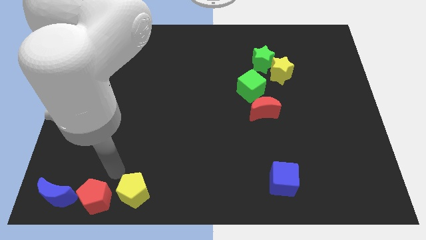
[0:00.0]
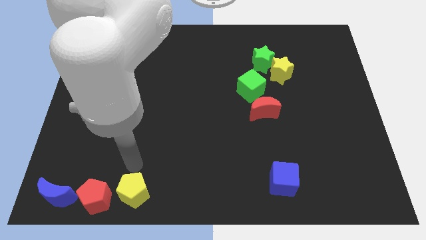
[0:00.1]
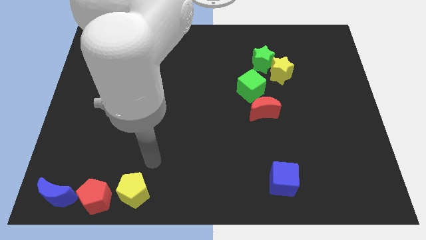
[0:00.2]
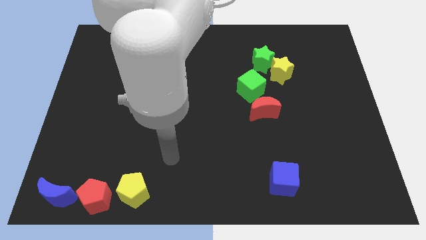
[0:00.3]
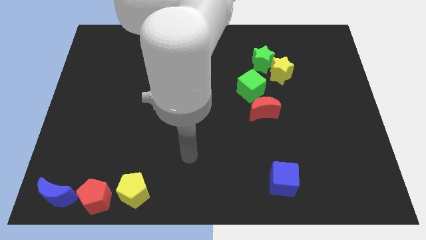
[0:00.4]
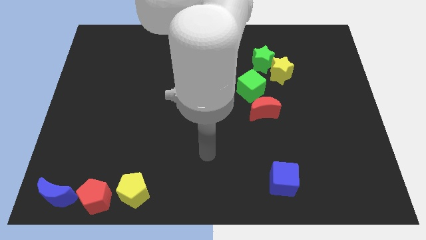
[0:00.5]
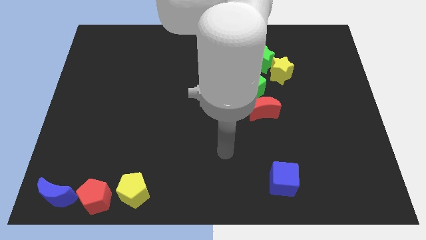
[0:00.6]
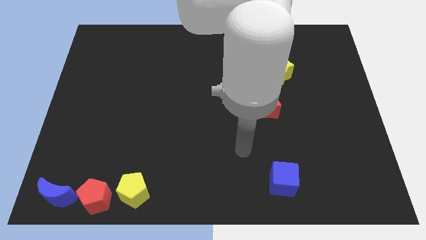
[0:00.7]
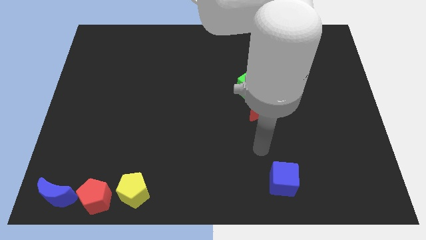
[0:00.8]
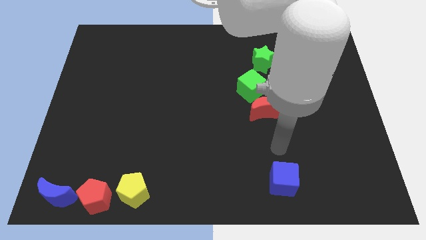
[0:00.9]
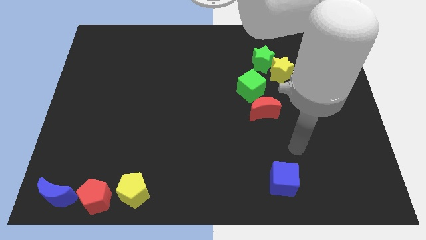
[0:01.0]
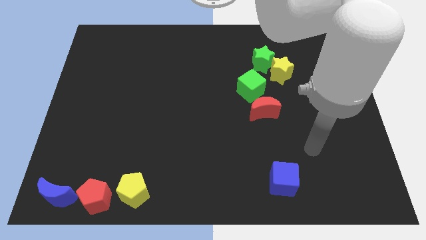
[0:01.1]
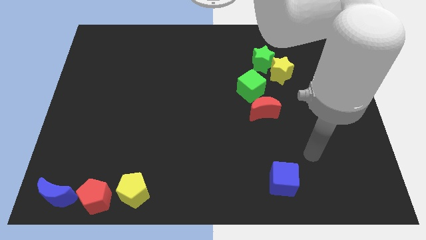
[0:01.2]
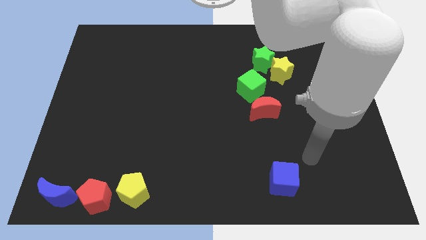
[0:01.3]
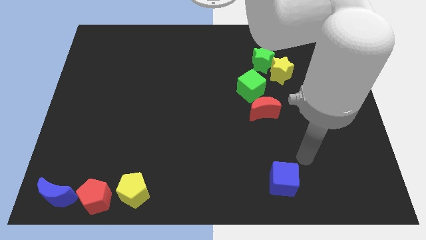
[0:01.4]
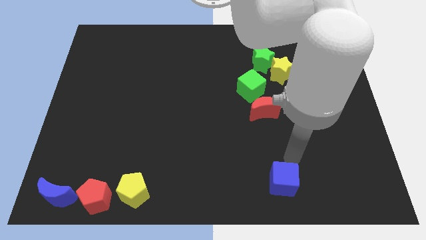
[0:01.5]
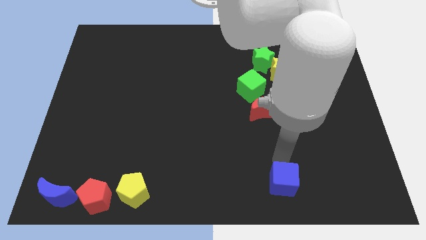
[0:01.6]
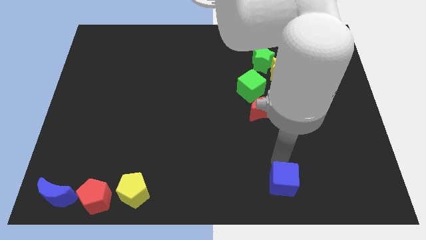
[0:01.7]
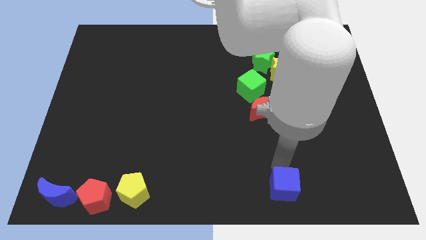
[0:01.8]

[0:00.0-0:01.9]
move your arm to the top of blue block

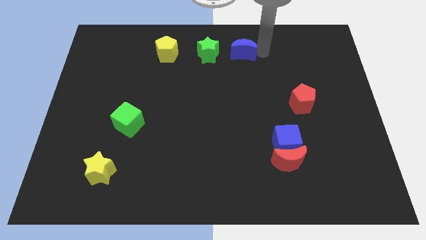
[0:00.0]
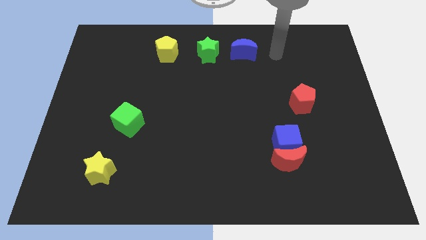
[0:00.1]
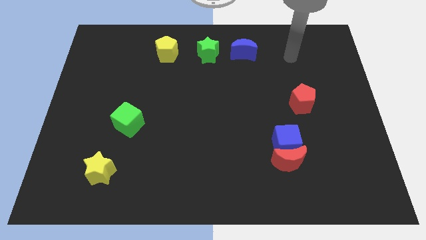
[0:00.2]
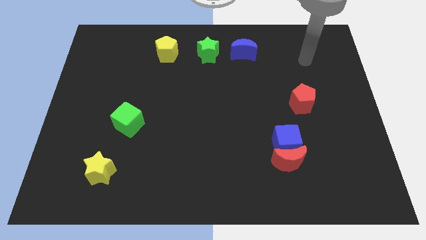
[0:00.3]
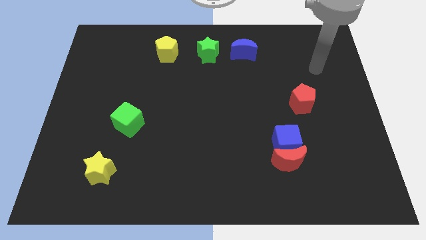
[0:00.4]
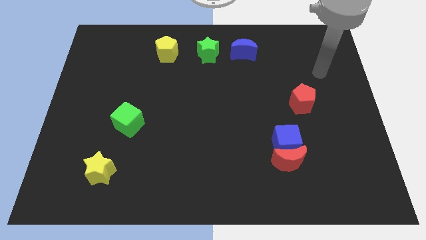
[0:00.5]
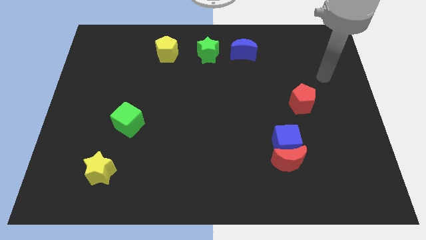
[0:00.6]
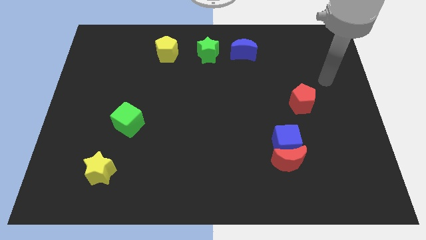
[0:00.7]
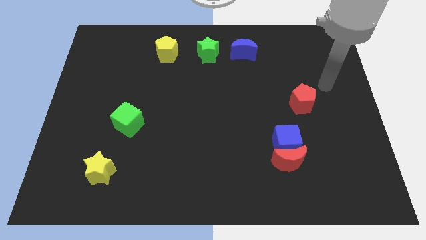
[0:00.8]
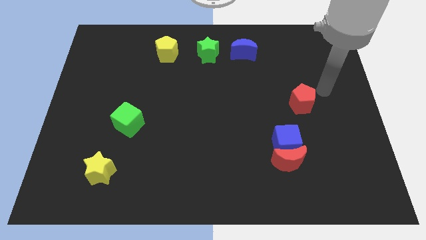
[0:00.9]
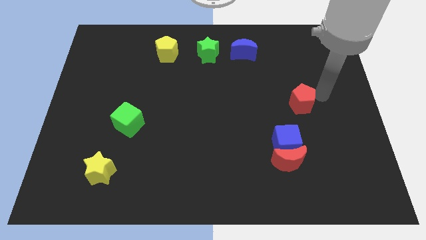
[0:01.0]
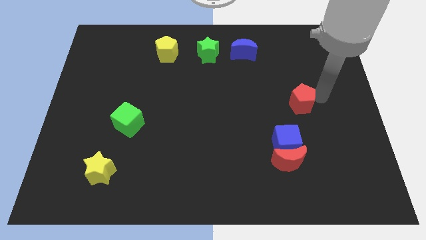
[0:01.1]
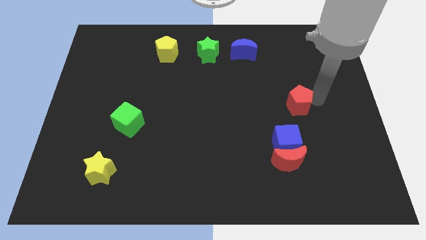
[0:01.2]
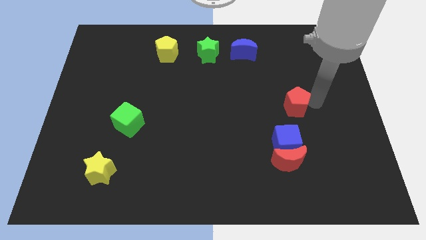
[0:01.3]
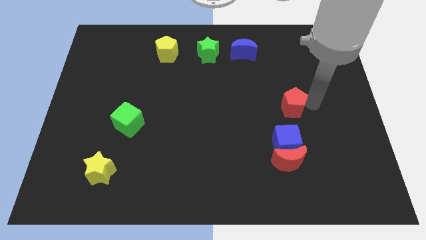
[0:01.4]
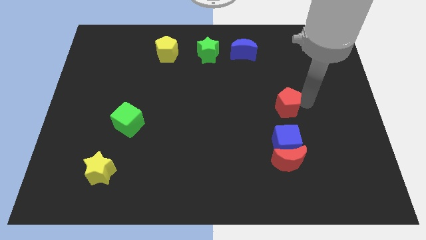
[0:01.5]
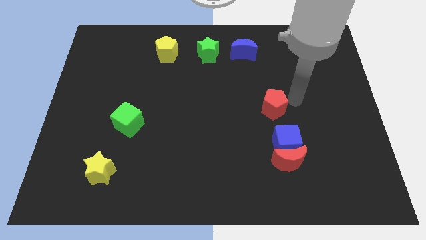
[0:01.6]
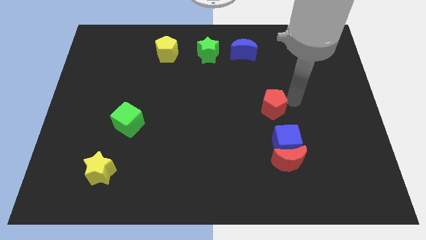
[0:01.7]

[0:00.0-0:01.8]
move the red pentagon slightly vertically top of the blue cube

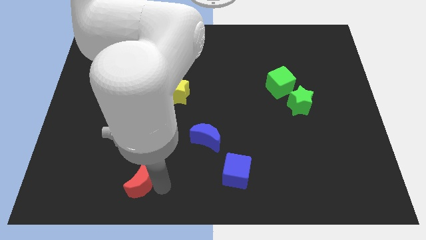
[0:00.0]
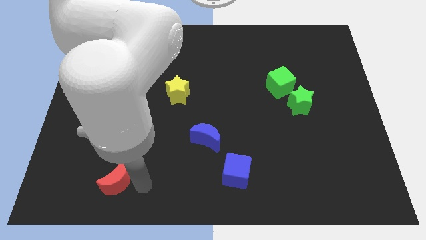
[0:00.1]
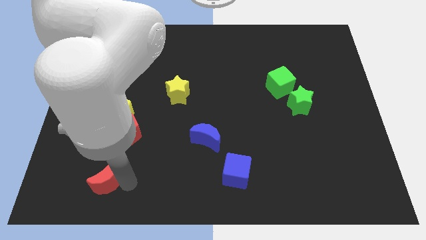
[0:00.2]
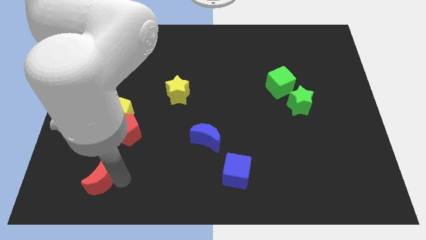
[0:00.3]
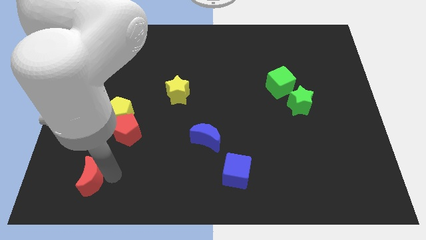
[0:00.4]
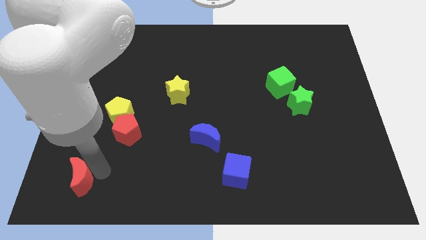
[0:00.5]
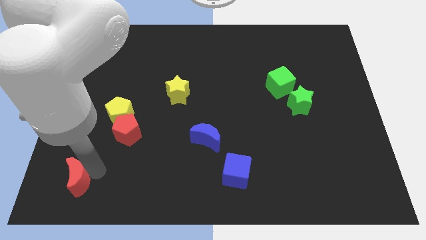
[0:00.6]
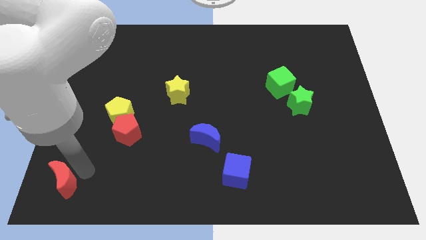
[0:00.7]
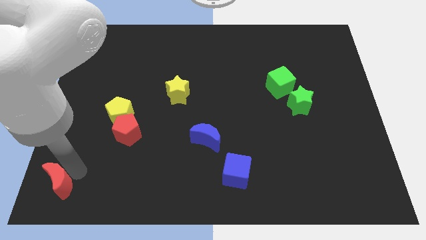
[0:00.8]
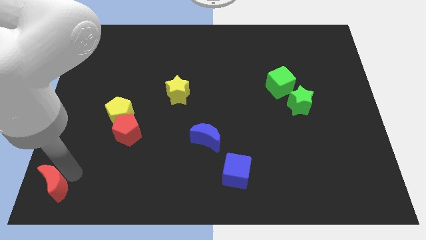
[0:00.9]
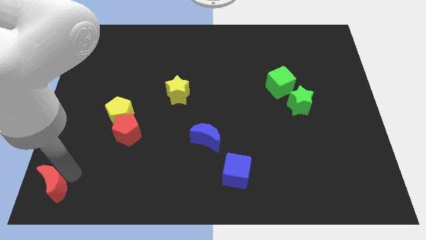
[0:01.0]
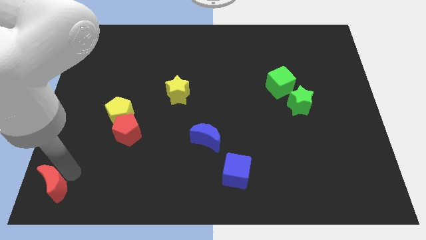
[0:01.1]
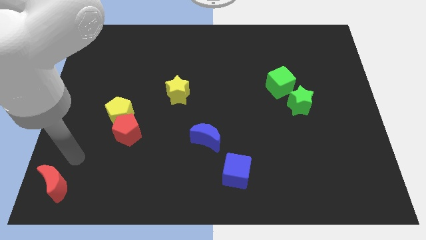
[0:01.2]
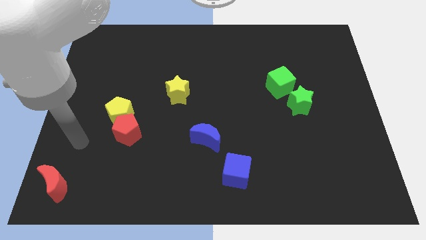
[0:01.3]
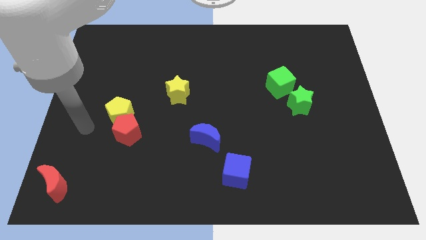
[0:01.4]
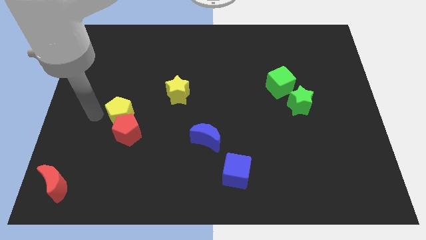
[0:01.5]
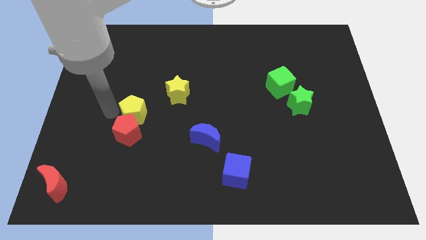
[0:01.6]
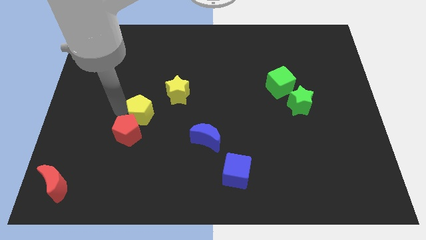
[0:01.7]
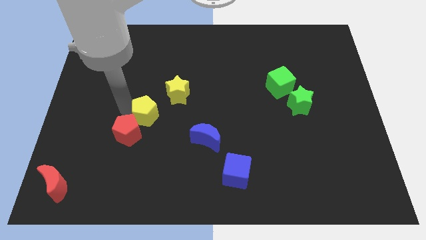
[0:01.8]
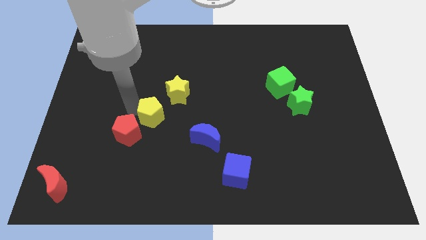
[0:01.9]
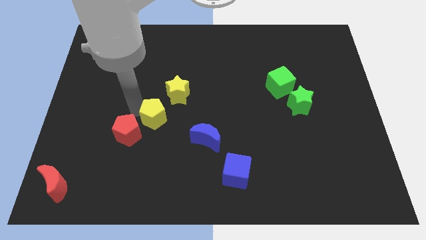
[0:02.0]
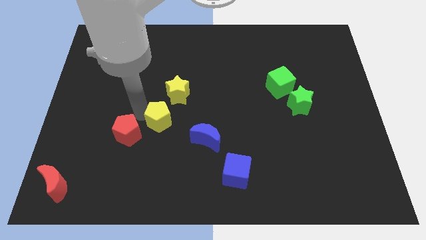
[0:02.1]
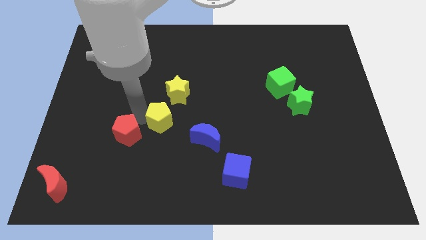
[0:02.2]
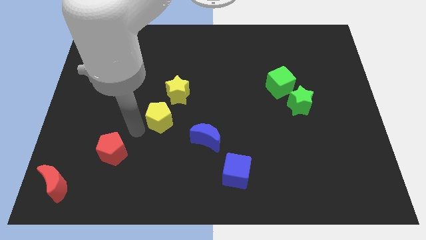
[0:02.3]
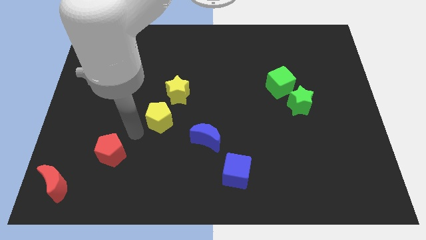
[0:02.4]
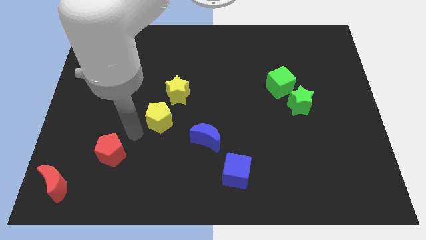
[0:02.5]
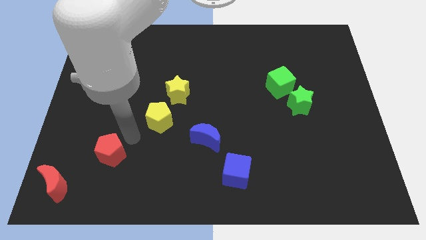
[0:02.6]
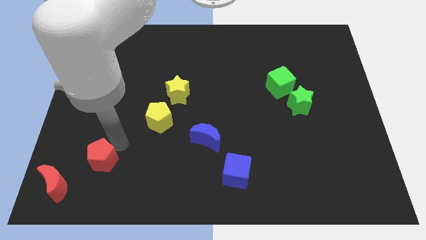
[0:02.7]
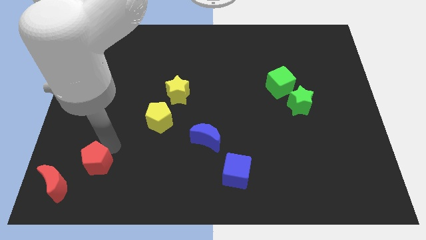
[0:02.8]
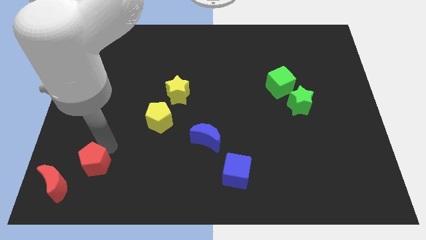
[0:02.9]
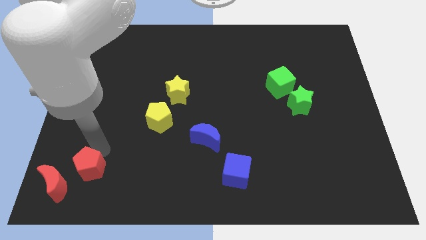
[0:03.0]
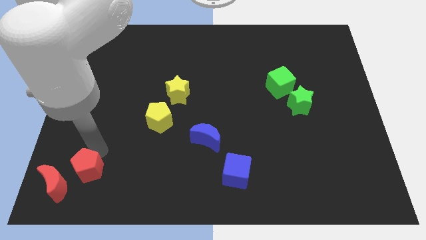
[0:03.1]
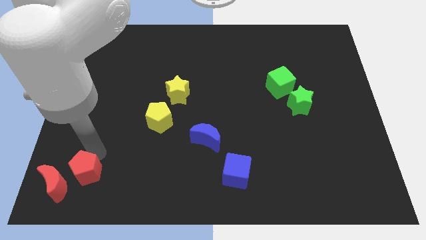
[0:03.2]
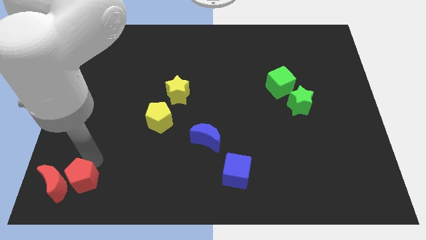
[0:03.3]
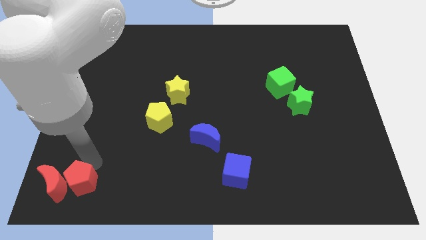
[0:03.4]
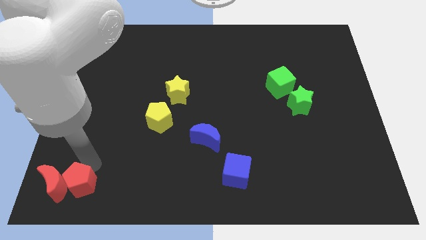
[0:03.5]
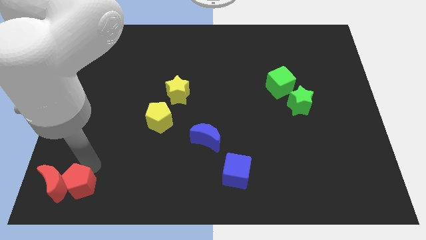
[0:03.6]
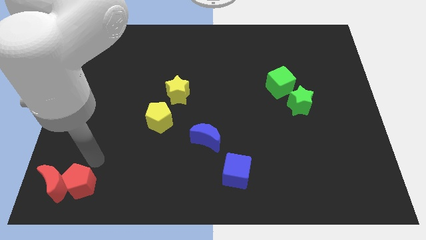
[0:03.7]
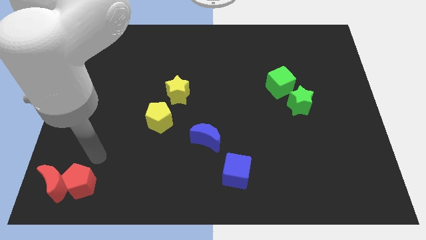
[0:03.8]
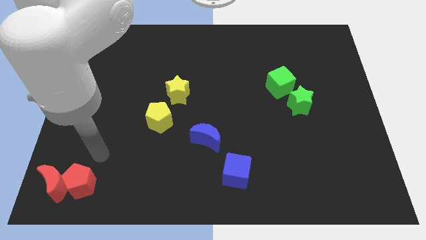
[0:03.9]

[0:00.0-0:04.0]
place the red pentagon right to the red moon

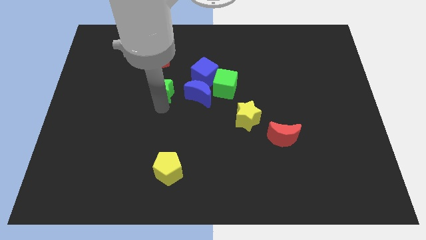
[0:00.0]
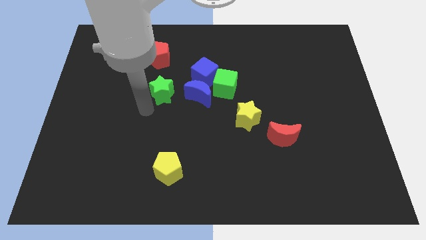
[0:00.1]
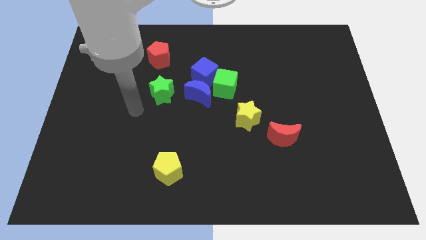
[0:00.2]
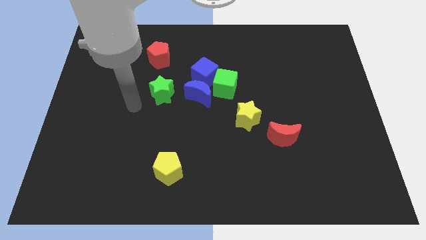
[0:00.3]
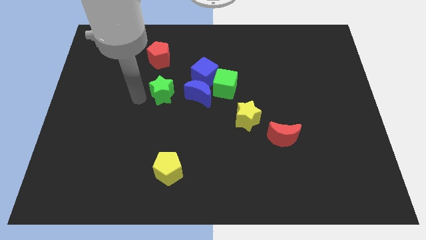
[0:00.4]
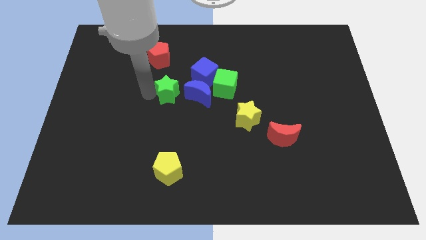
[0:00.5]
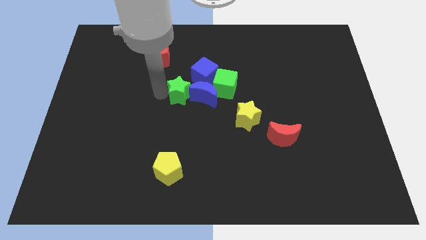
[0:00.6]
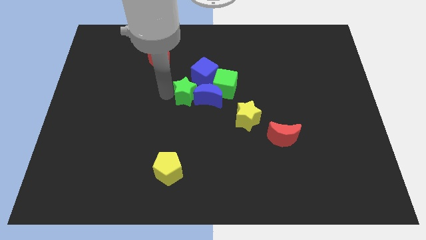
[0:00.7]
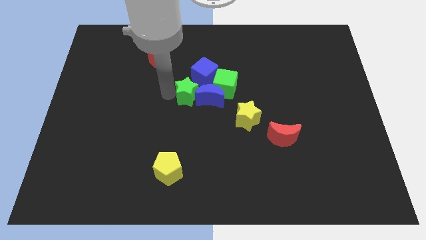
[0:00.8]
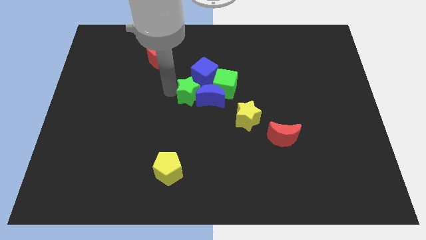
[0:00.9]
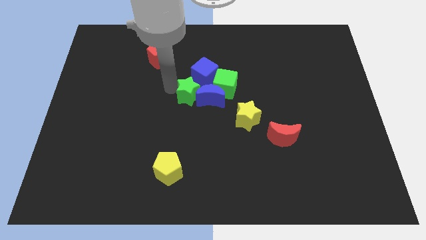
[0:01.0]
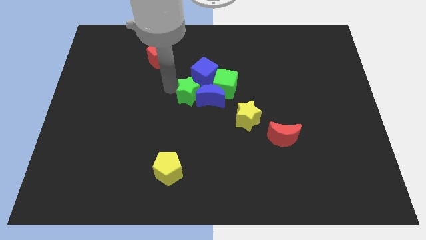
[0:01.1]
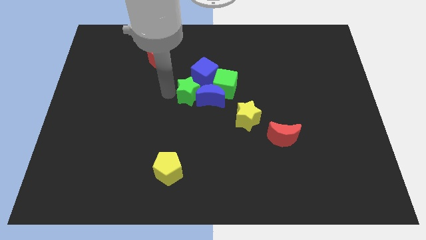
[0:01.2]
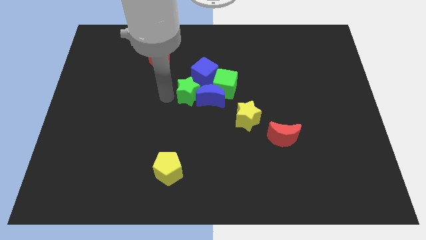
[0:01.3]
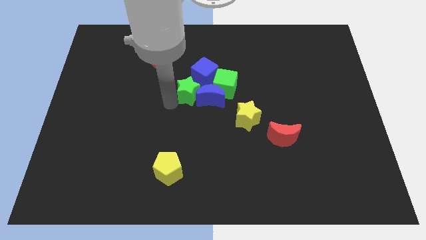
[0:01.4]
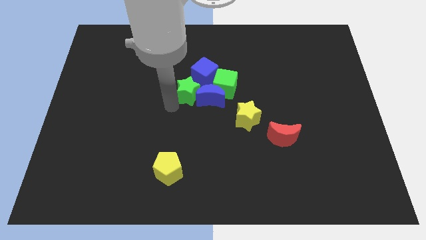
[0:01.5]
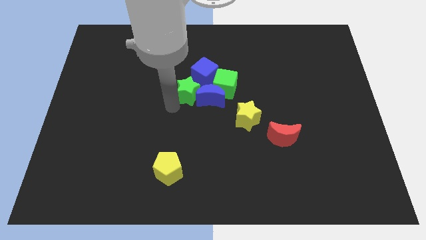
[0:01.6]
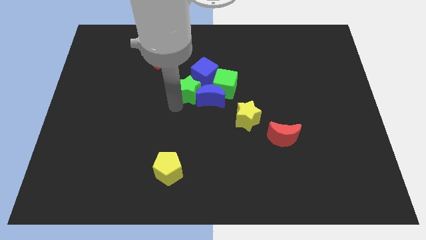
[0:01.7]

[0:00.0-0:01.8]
move the green star into the blue moon
